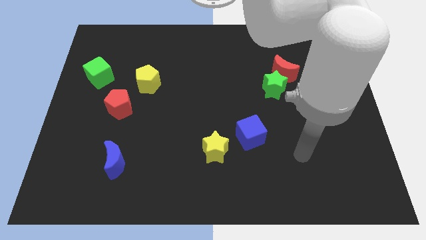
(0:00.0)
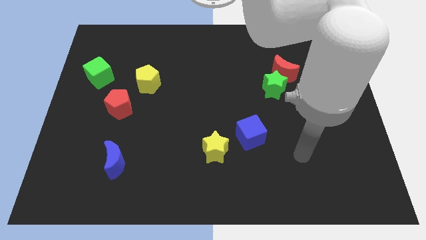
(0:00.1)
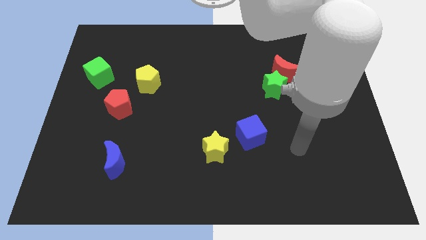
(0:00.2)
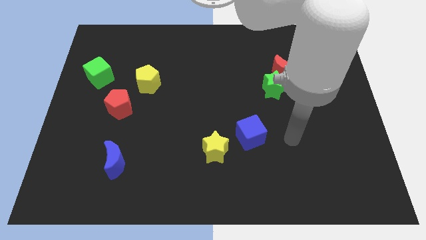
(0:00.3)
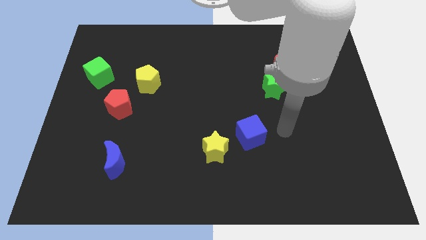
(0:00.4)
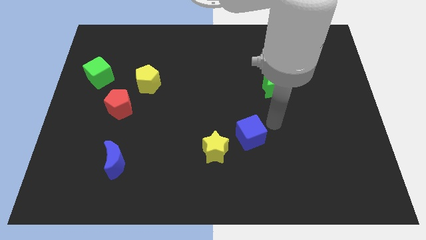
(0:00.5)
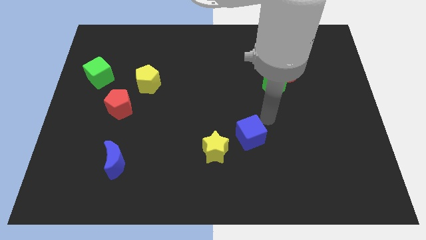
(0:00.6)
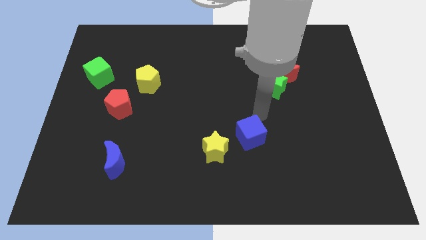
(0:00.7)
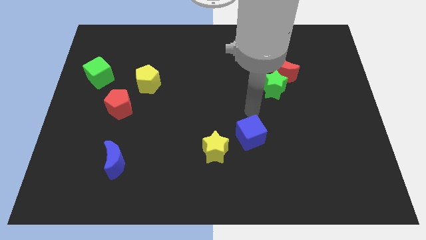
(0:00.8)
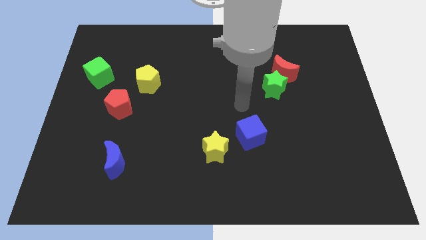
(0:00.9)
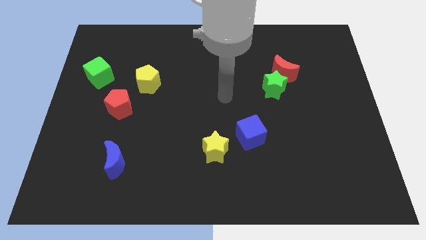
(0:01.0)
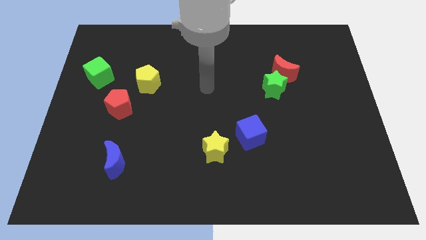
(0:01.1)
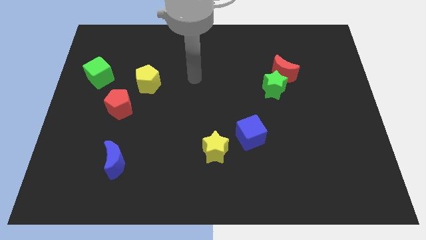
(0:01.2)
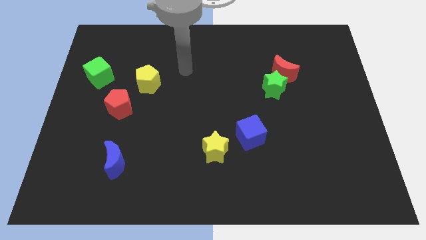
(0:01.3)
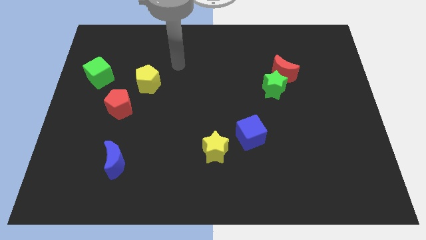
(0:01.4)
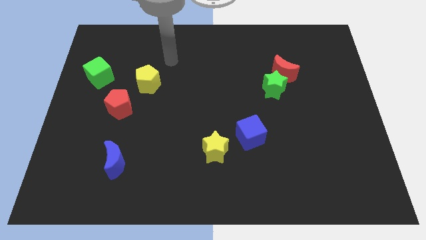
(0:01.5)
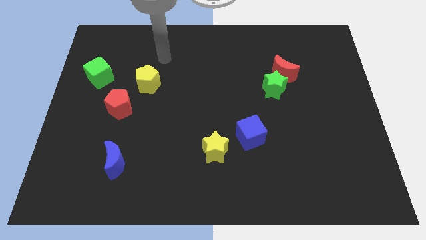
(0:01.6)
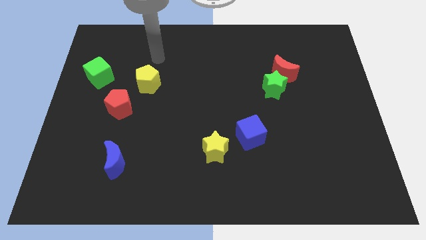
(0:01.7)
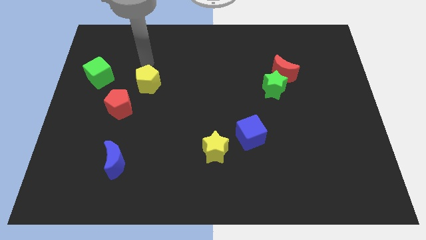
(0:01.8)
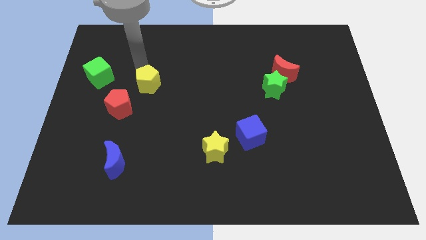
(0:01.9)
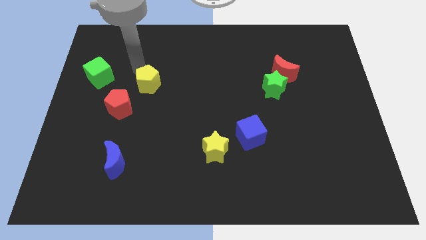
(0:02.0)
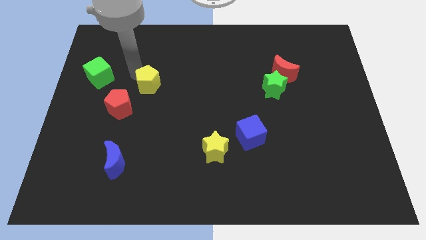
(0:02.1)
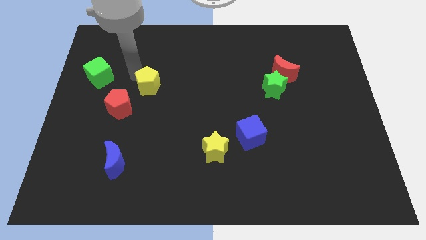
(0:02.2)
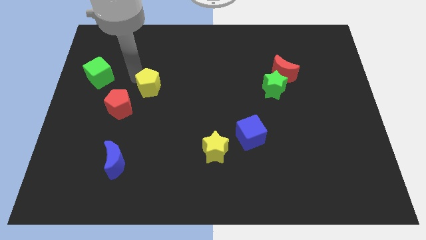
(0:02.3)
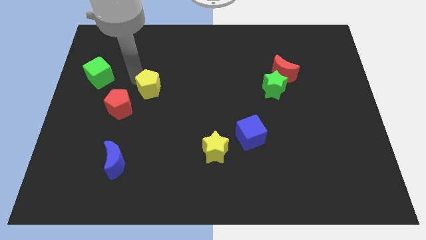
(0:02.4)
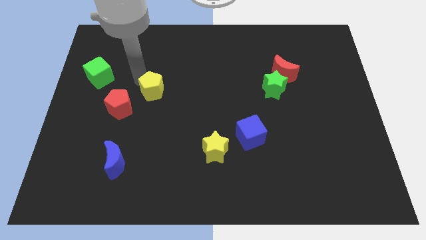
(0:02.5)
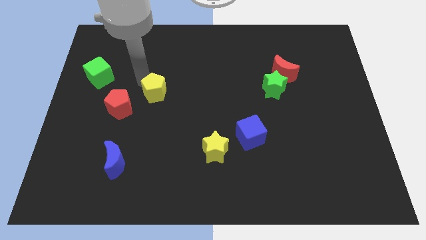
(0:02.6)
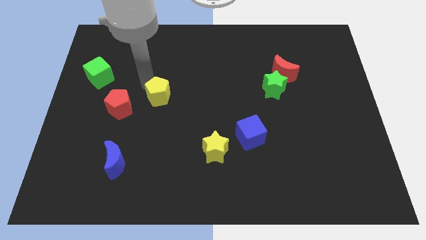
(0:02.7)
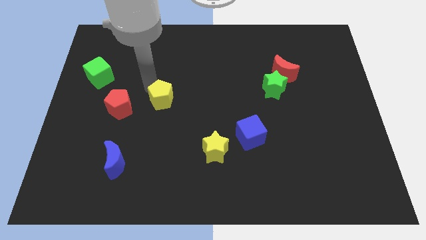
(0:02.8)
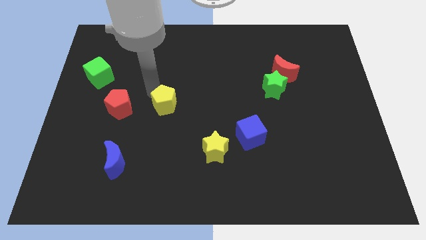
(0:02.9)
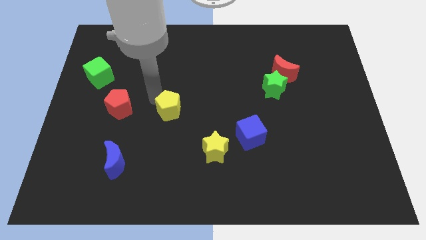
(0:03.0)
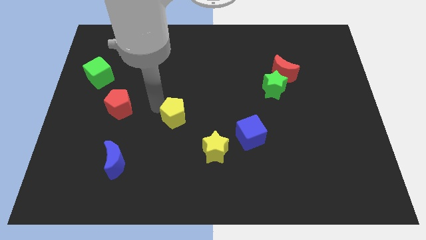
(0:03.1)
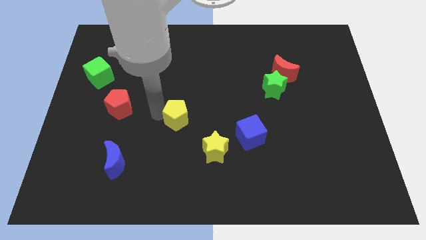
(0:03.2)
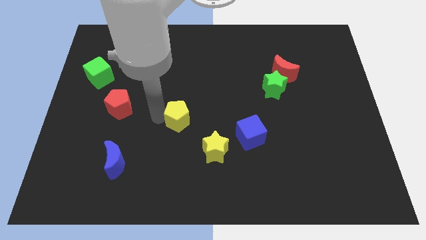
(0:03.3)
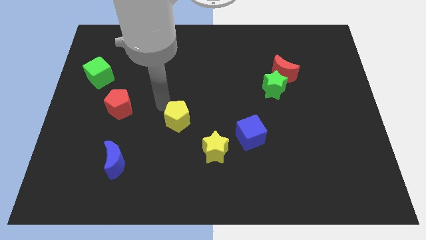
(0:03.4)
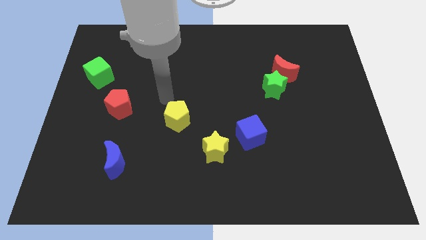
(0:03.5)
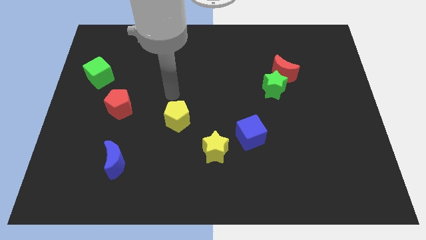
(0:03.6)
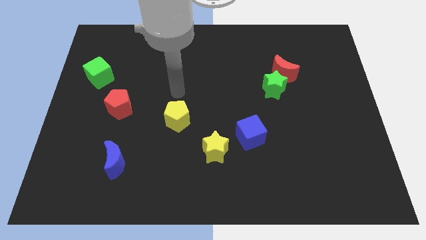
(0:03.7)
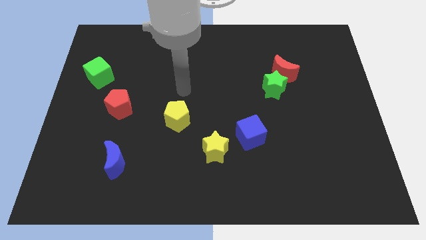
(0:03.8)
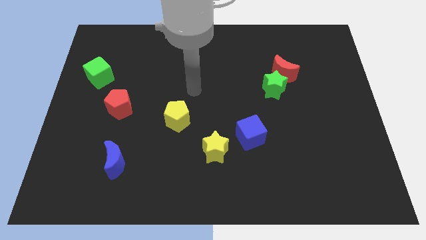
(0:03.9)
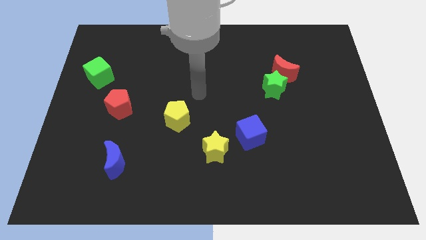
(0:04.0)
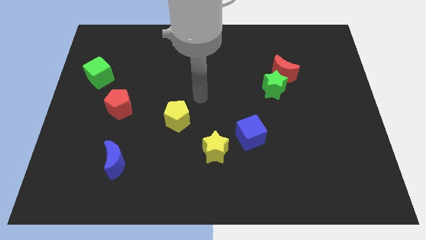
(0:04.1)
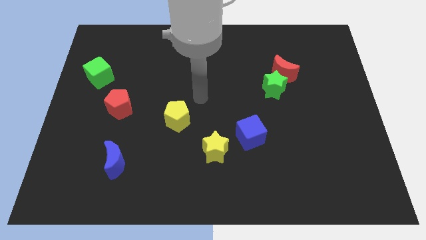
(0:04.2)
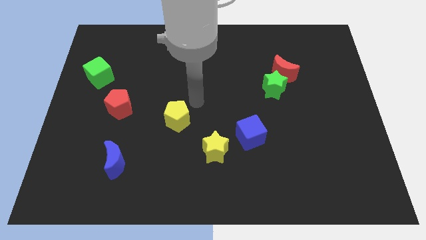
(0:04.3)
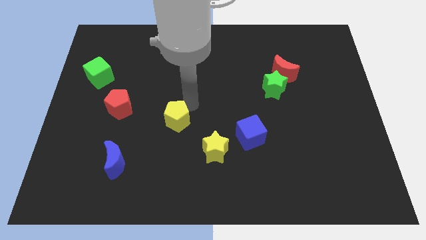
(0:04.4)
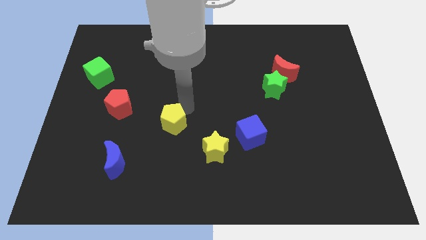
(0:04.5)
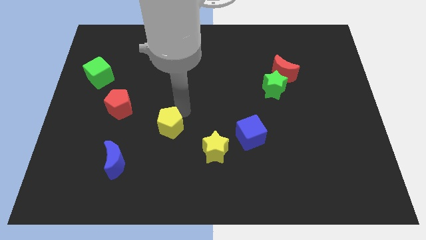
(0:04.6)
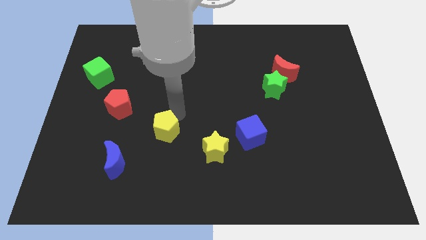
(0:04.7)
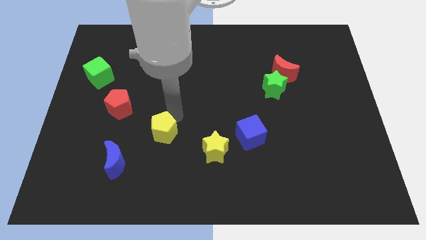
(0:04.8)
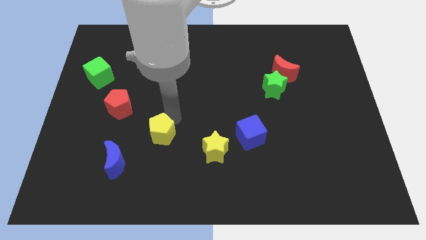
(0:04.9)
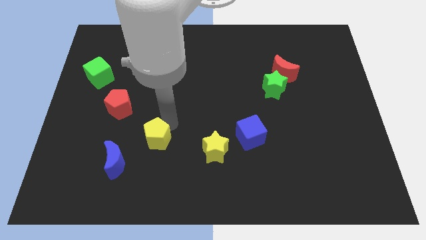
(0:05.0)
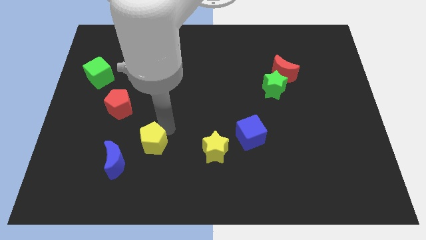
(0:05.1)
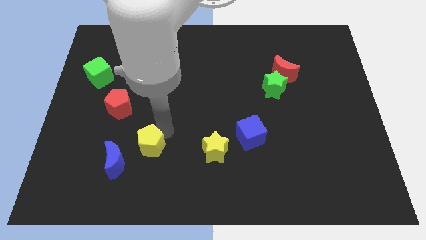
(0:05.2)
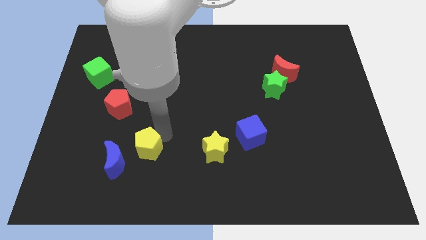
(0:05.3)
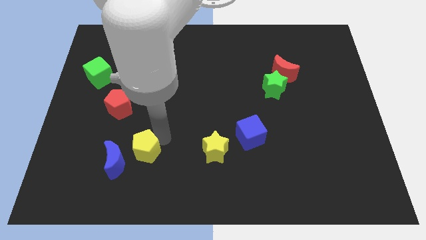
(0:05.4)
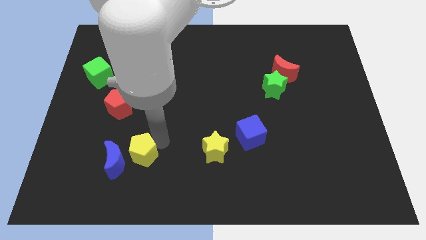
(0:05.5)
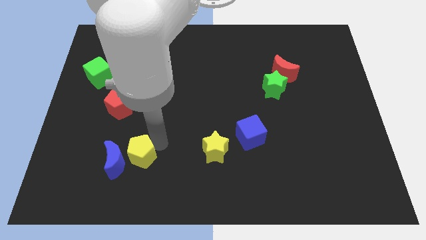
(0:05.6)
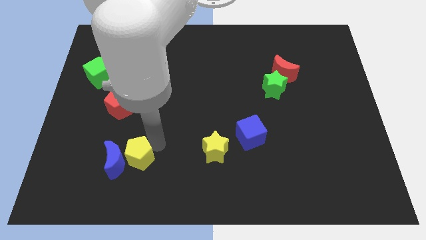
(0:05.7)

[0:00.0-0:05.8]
slide the yellow pentagon next to the blue moon

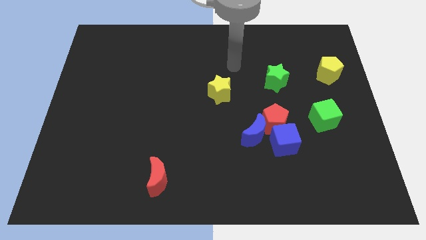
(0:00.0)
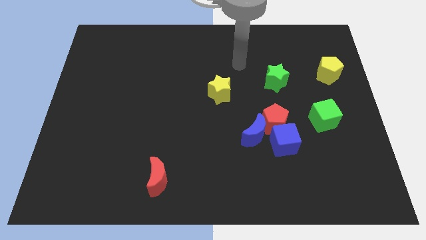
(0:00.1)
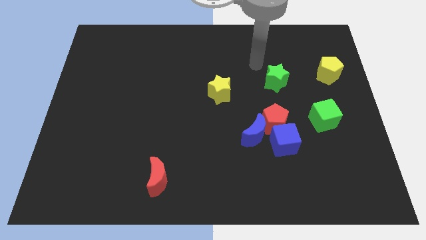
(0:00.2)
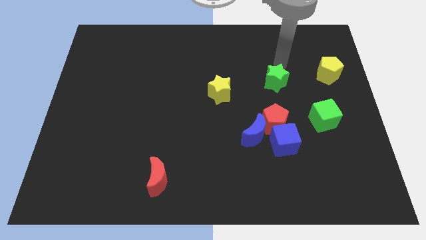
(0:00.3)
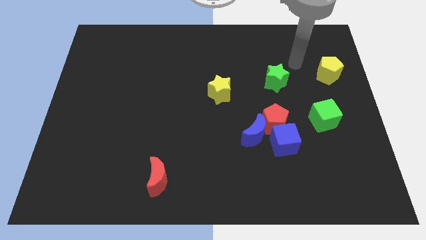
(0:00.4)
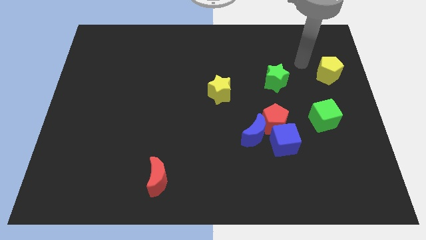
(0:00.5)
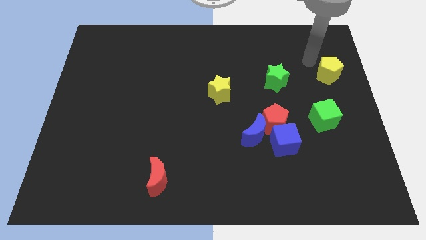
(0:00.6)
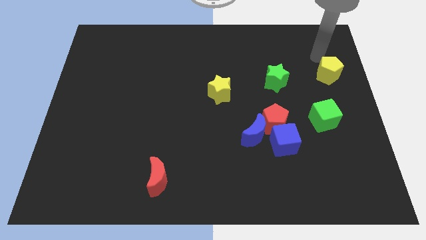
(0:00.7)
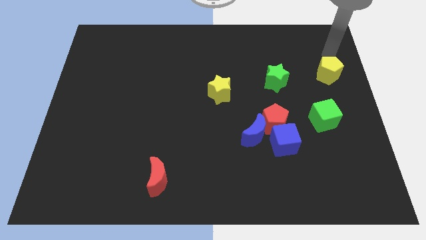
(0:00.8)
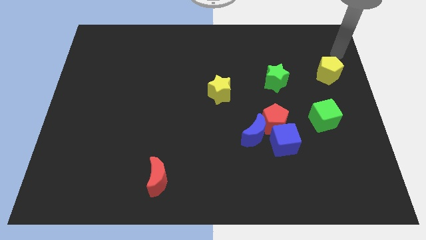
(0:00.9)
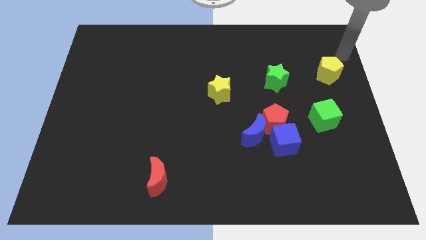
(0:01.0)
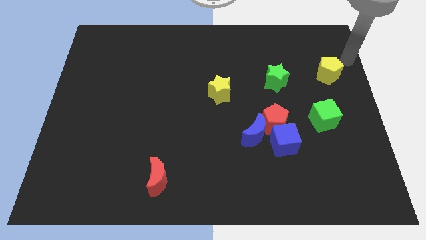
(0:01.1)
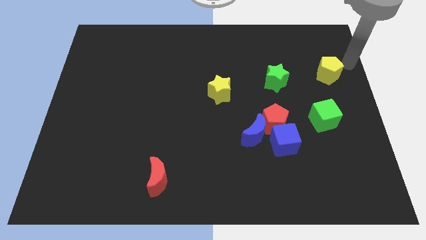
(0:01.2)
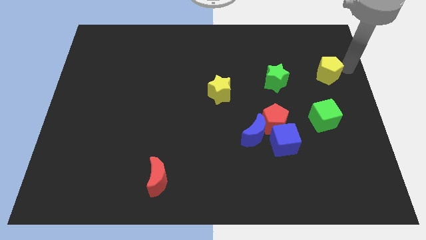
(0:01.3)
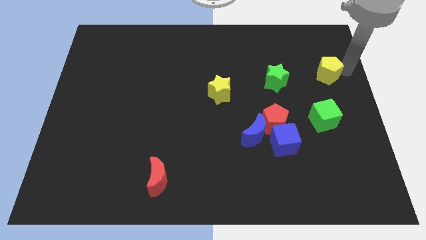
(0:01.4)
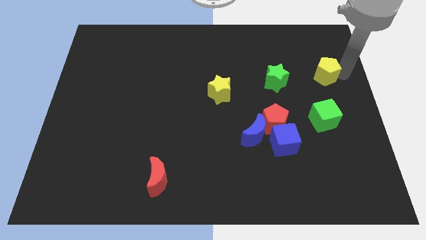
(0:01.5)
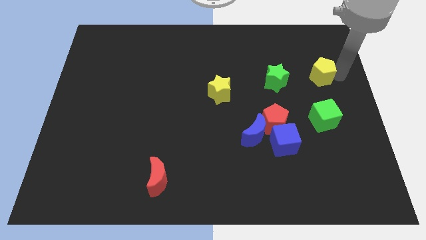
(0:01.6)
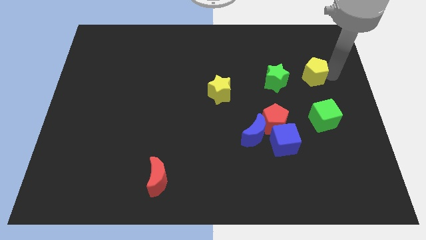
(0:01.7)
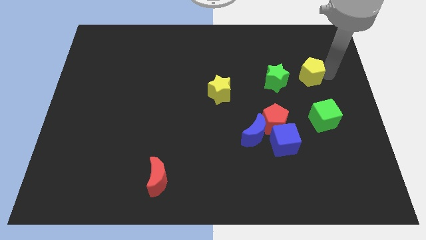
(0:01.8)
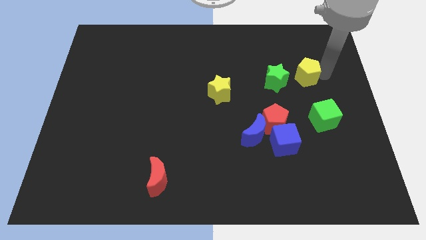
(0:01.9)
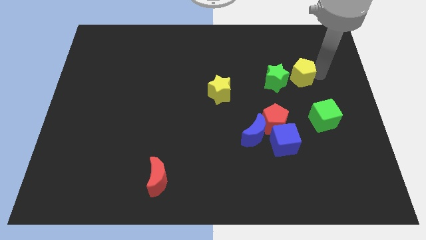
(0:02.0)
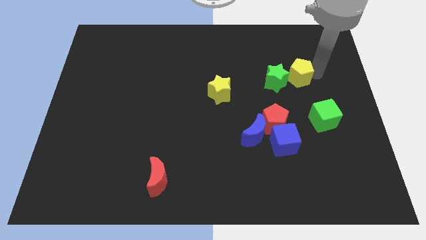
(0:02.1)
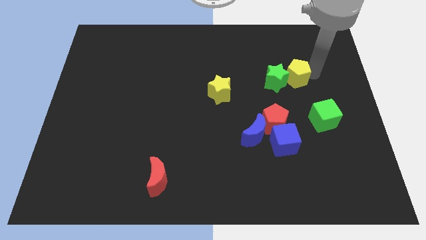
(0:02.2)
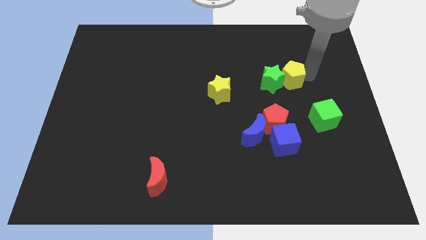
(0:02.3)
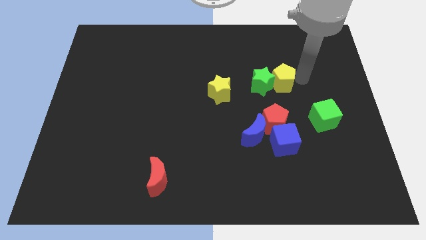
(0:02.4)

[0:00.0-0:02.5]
slide the yellow pentagon close to the green star

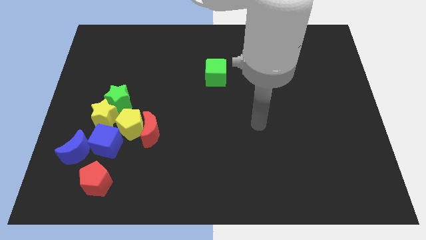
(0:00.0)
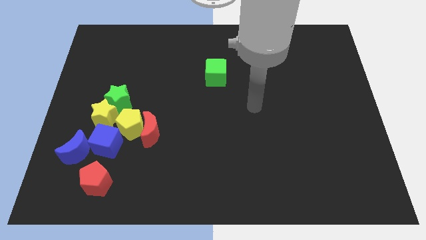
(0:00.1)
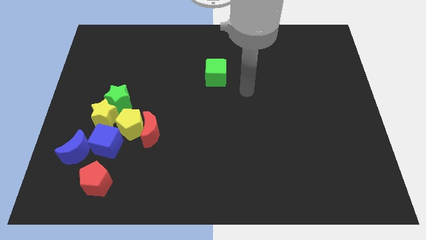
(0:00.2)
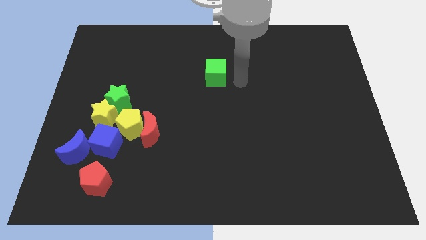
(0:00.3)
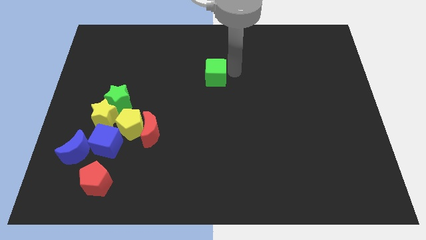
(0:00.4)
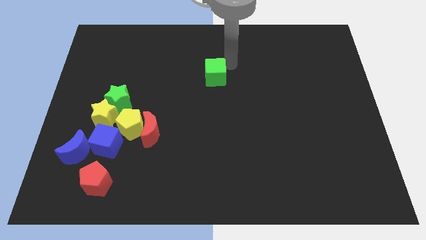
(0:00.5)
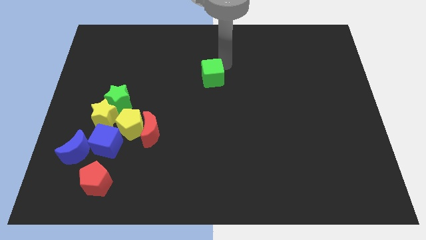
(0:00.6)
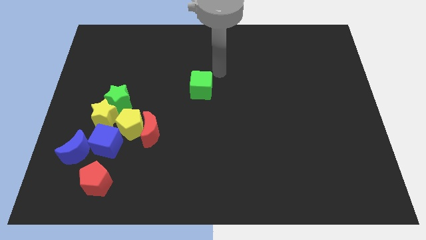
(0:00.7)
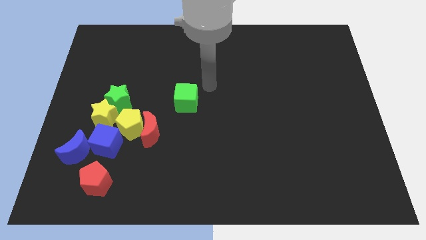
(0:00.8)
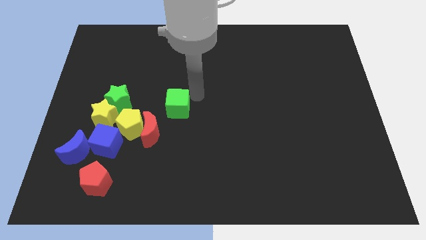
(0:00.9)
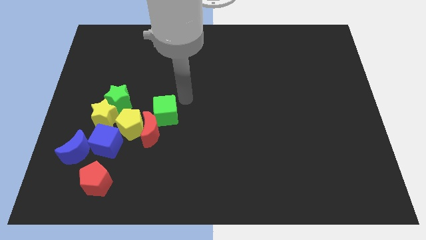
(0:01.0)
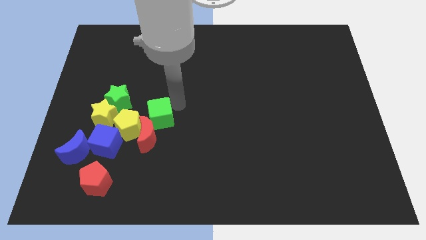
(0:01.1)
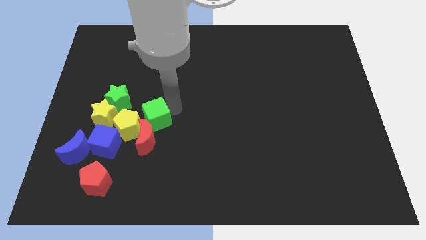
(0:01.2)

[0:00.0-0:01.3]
slide the green cube next to the red moon
